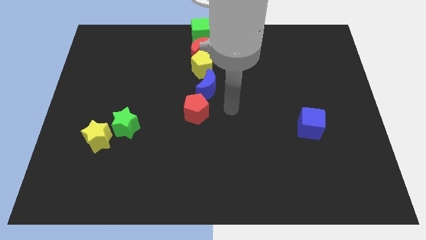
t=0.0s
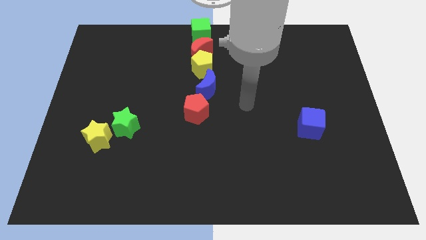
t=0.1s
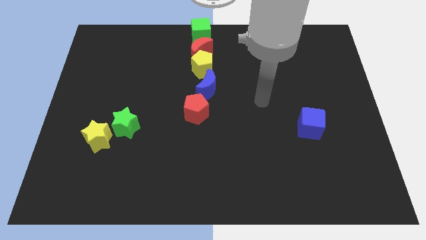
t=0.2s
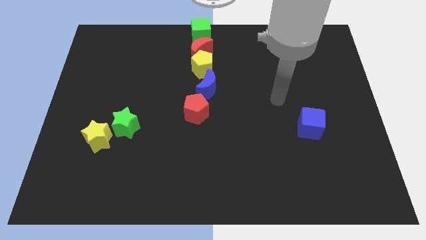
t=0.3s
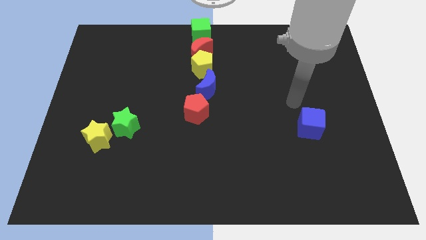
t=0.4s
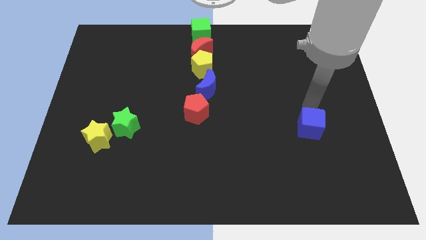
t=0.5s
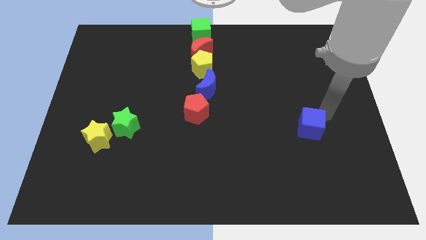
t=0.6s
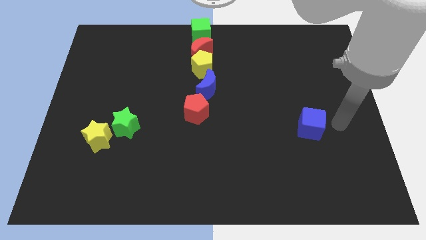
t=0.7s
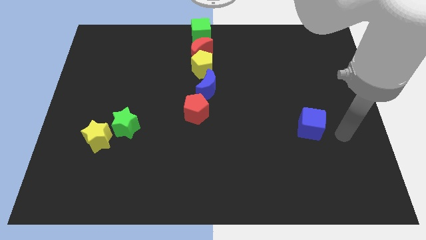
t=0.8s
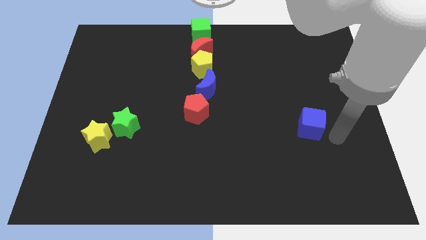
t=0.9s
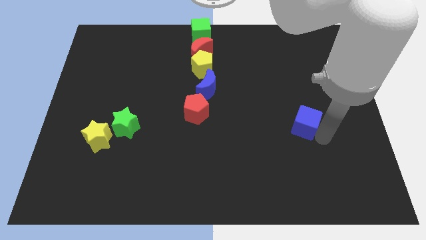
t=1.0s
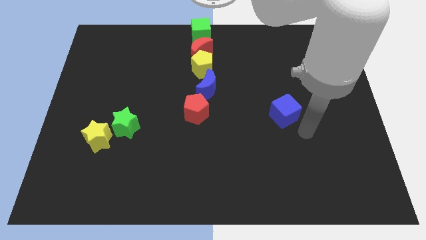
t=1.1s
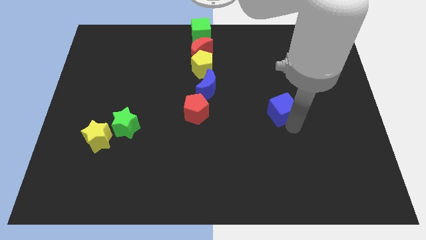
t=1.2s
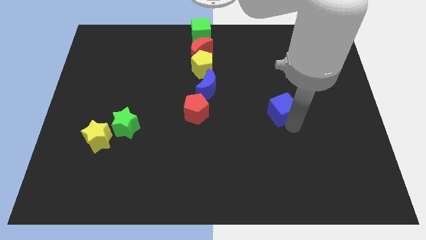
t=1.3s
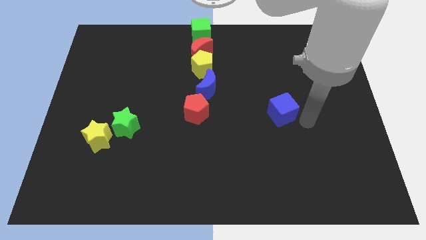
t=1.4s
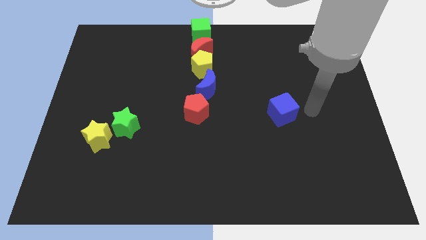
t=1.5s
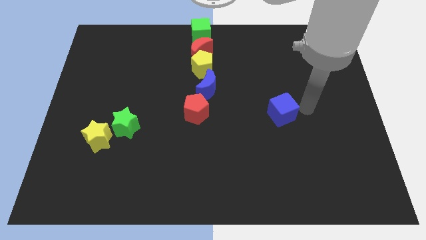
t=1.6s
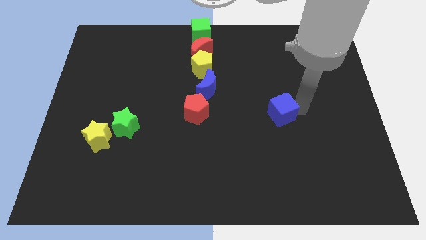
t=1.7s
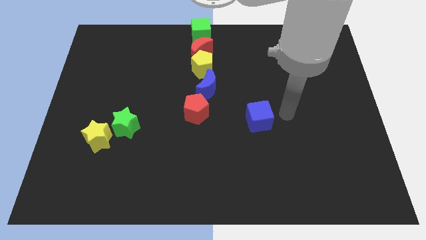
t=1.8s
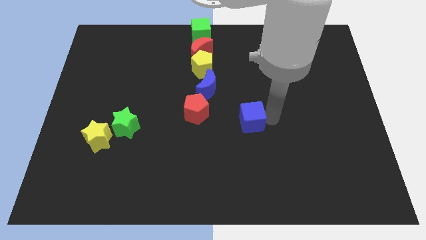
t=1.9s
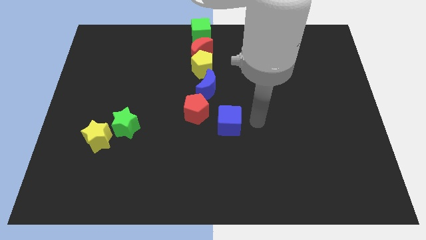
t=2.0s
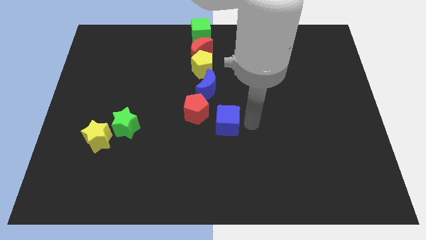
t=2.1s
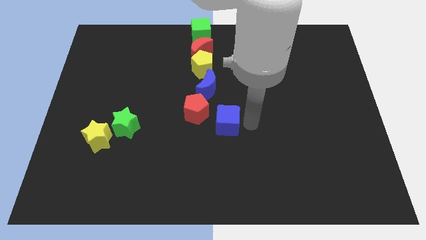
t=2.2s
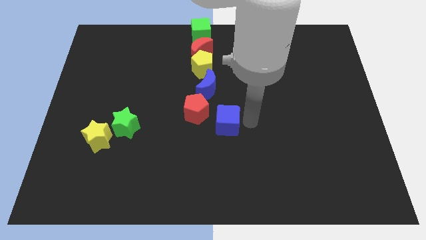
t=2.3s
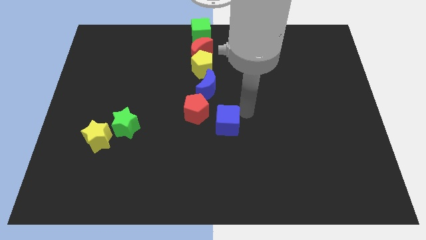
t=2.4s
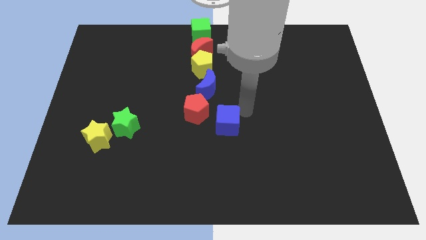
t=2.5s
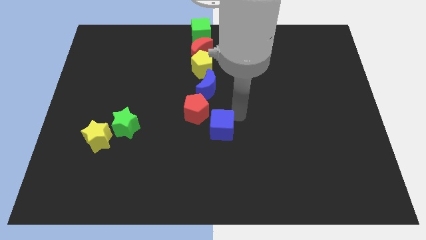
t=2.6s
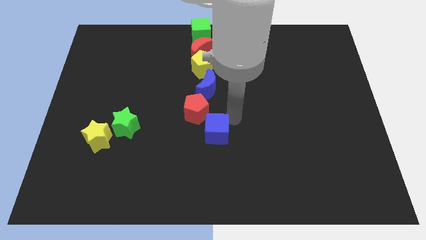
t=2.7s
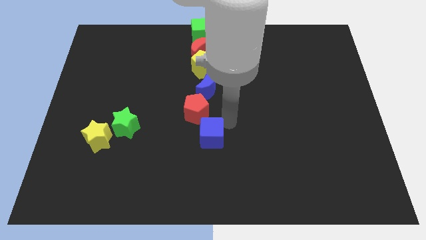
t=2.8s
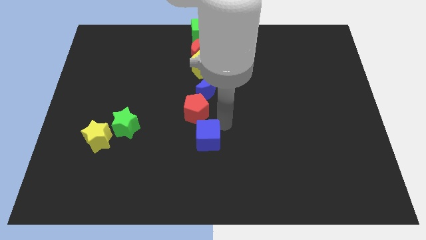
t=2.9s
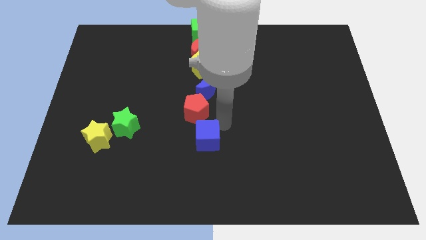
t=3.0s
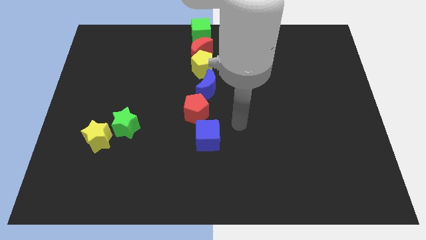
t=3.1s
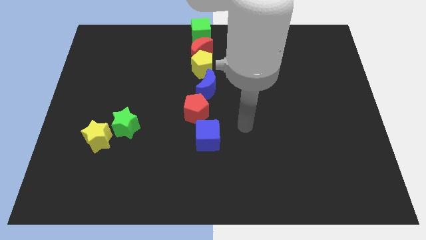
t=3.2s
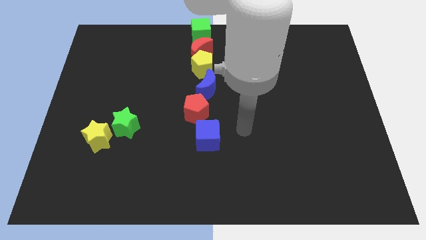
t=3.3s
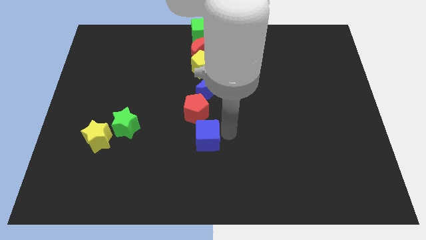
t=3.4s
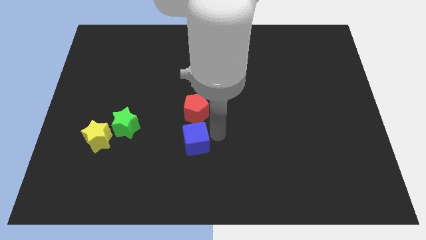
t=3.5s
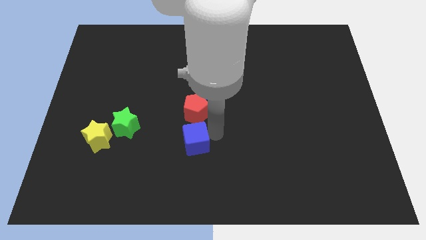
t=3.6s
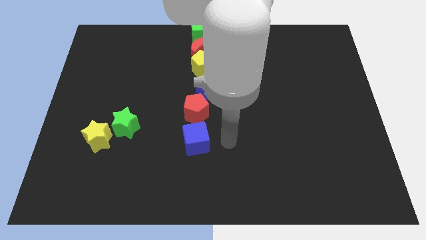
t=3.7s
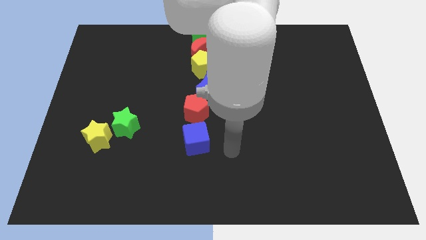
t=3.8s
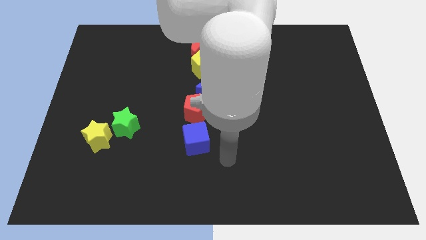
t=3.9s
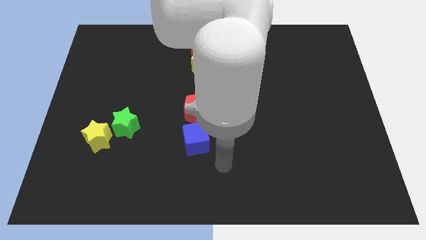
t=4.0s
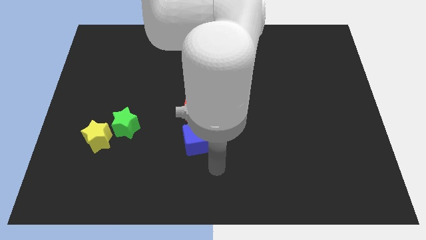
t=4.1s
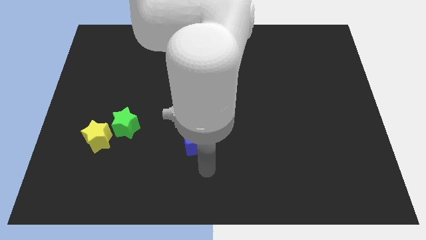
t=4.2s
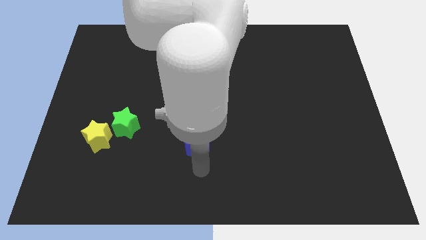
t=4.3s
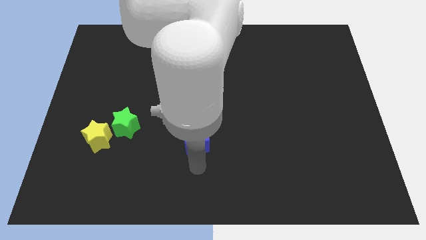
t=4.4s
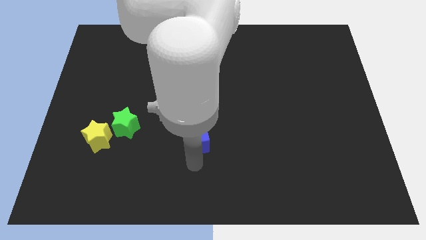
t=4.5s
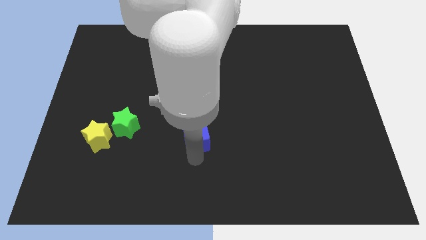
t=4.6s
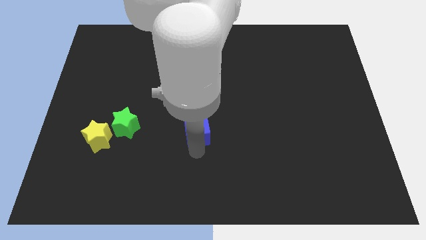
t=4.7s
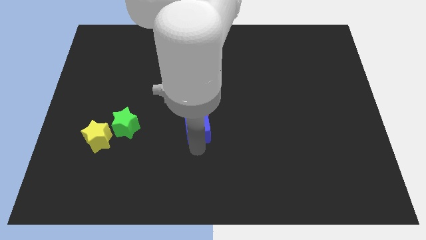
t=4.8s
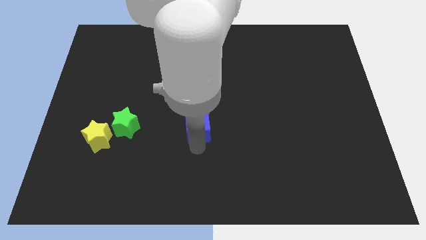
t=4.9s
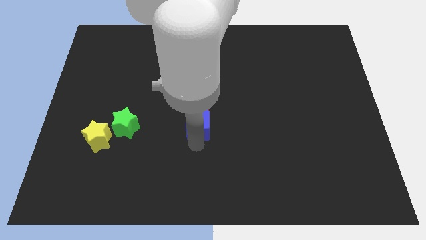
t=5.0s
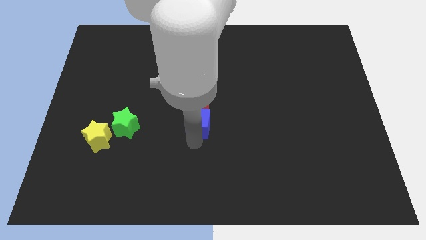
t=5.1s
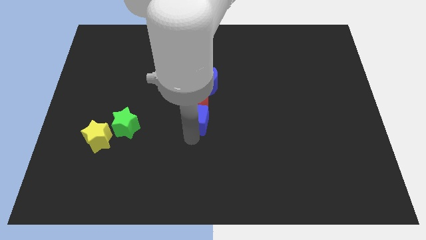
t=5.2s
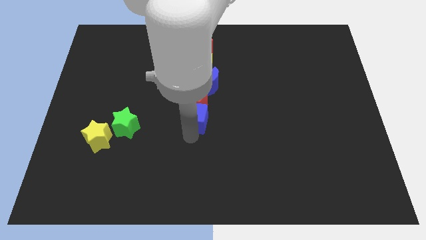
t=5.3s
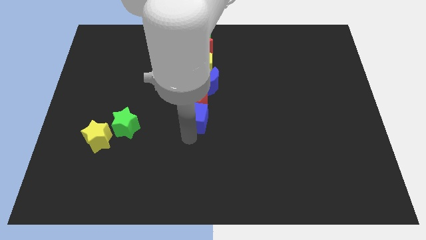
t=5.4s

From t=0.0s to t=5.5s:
push the blue cube towards the center of the board

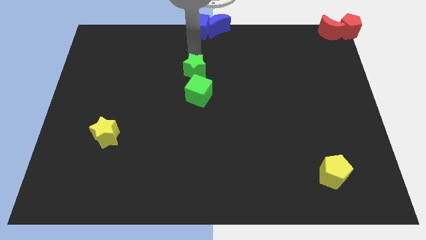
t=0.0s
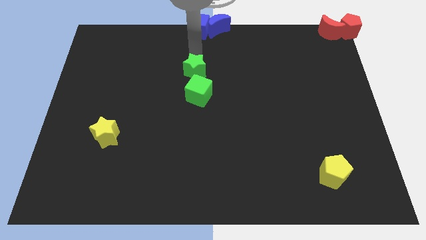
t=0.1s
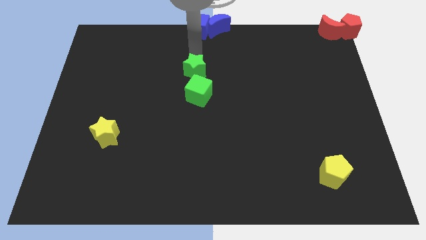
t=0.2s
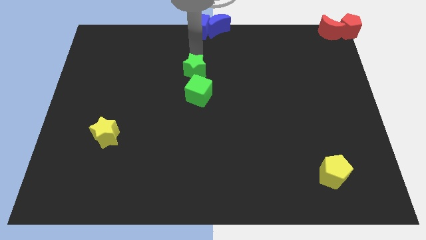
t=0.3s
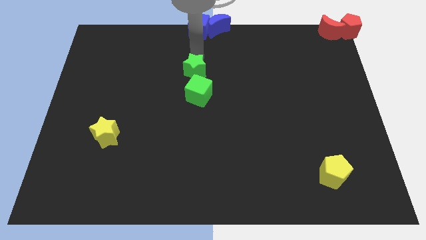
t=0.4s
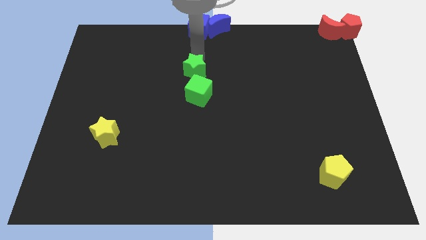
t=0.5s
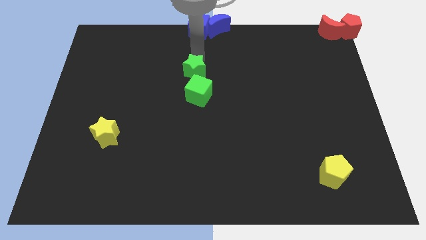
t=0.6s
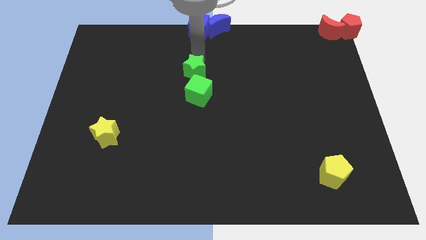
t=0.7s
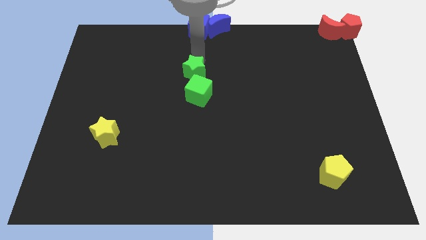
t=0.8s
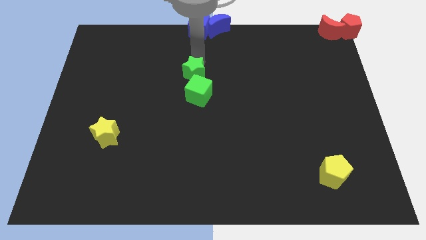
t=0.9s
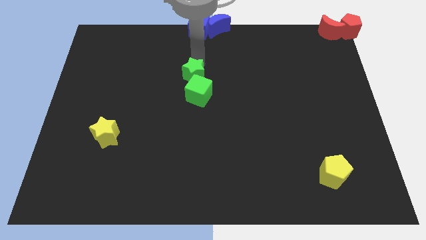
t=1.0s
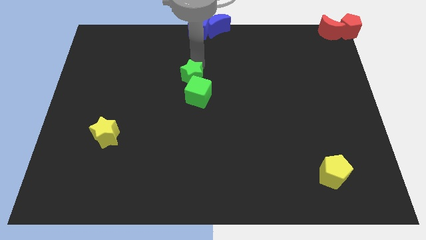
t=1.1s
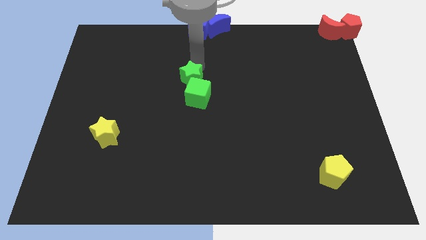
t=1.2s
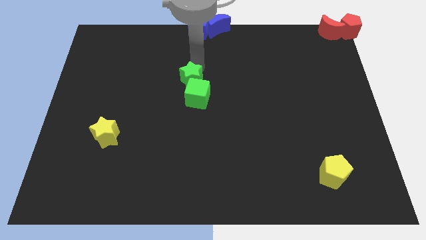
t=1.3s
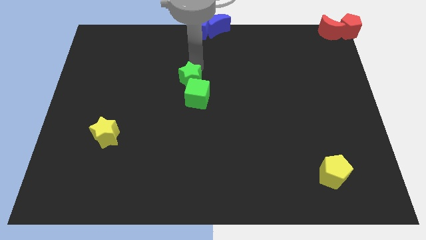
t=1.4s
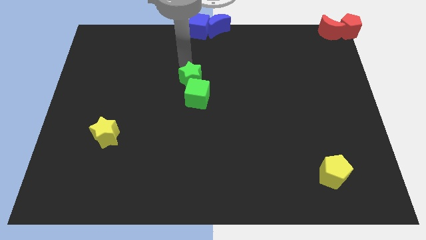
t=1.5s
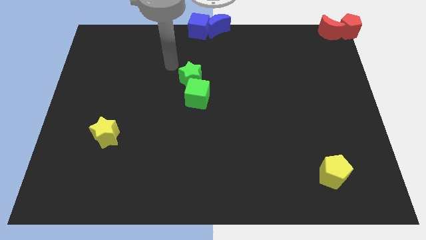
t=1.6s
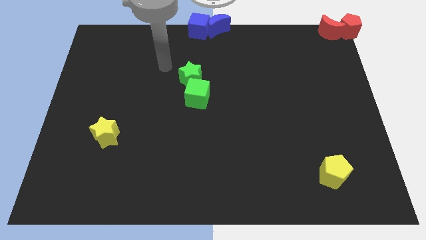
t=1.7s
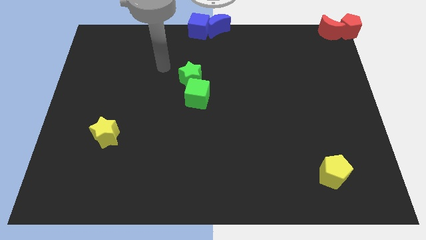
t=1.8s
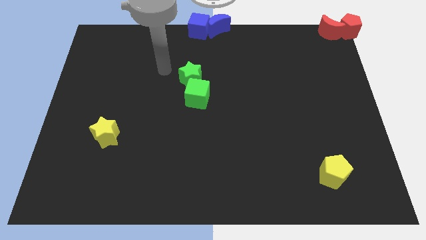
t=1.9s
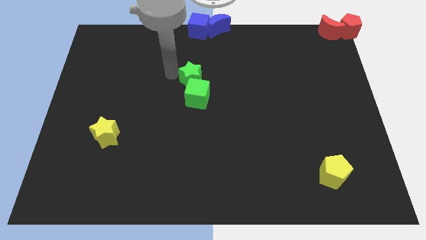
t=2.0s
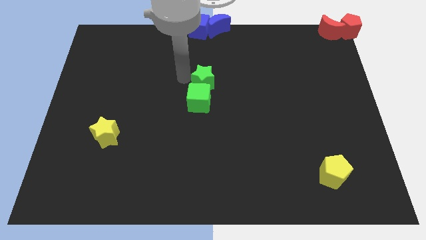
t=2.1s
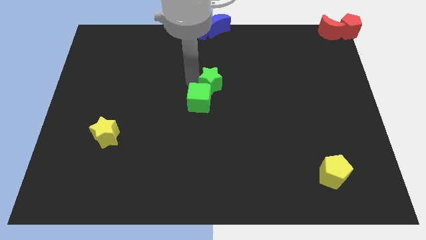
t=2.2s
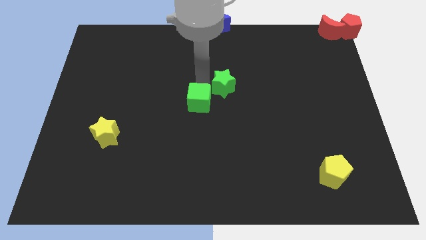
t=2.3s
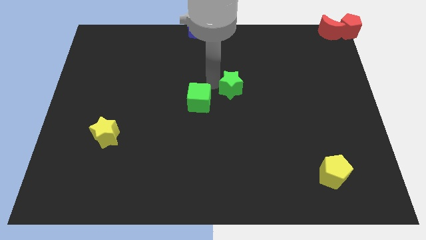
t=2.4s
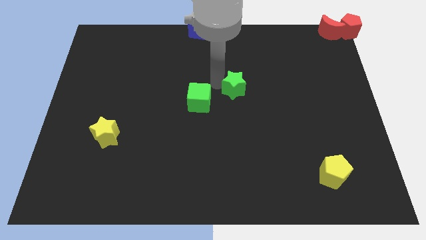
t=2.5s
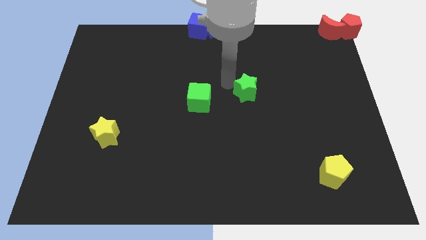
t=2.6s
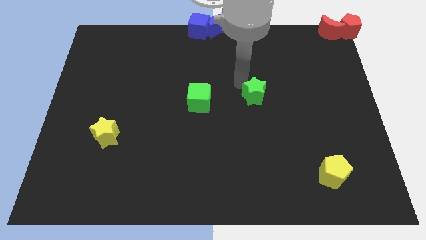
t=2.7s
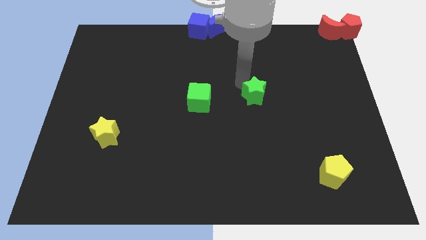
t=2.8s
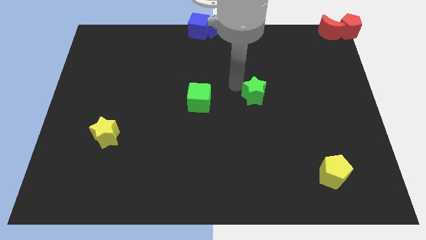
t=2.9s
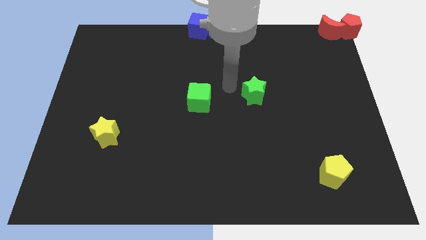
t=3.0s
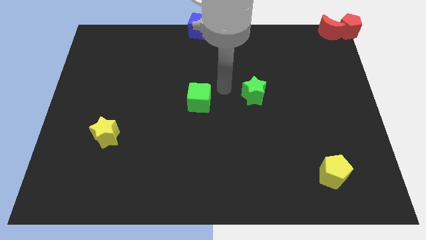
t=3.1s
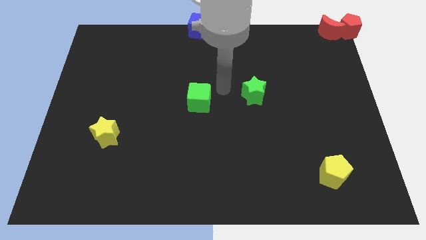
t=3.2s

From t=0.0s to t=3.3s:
move the green star away from the green cube
